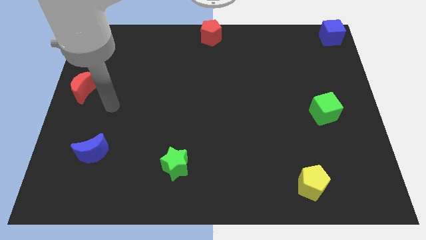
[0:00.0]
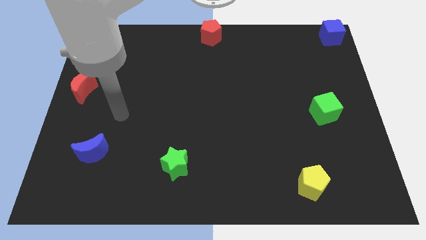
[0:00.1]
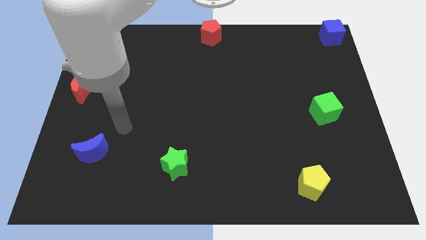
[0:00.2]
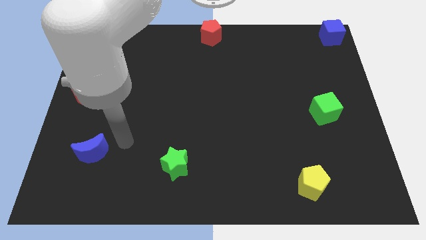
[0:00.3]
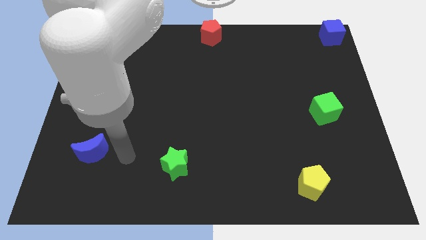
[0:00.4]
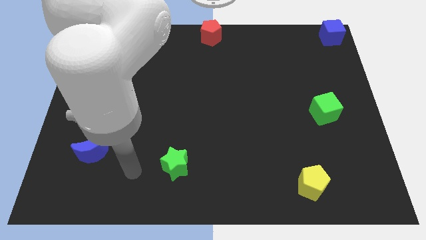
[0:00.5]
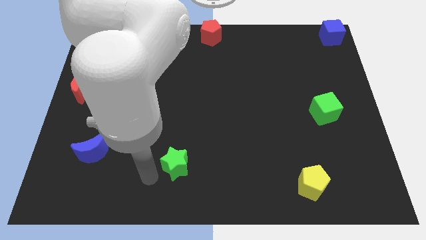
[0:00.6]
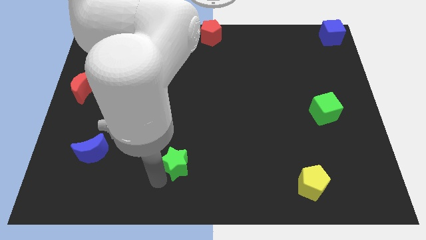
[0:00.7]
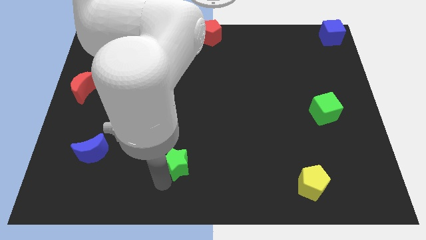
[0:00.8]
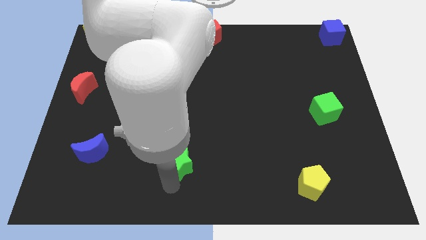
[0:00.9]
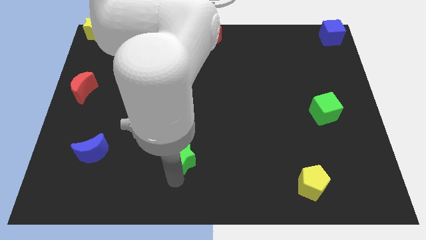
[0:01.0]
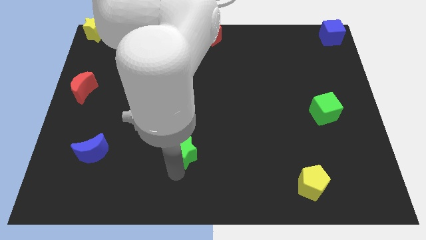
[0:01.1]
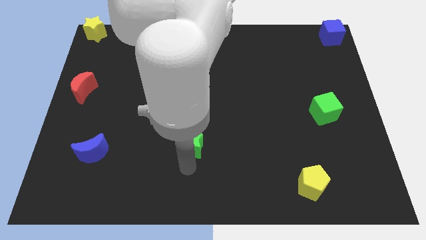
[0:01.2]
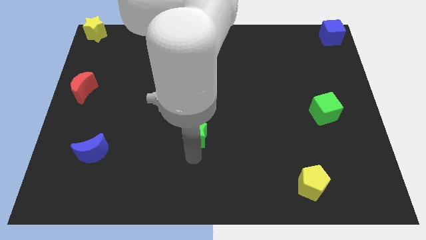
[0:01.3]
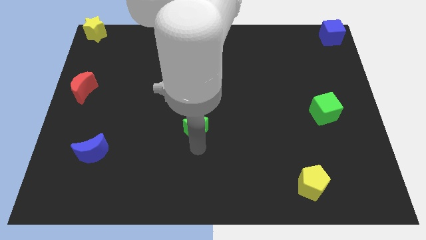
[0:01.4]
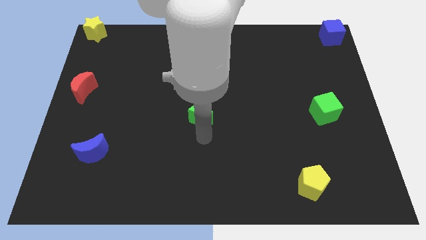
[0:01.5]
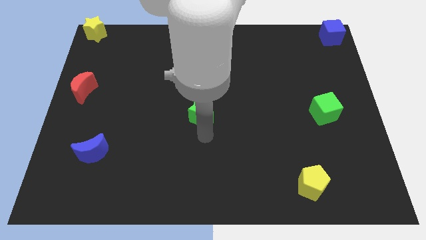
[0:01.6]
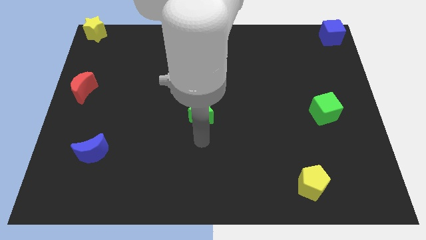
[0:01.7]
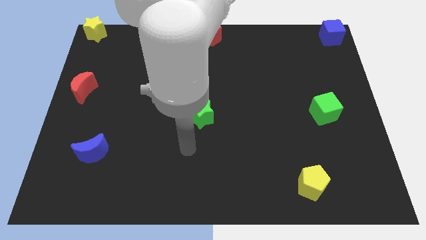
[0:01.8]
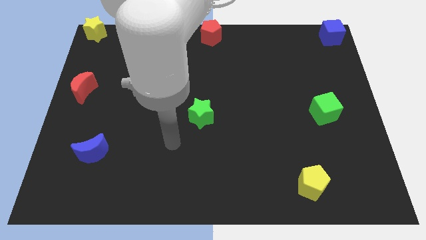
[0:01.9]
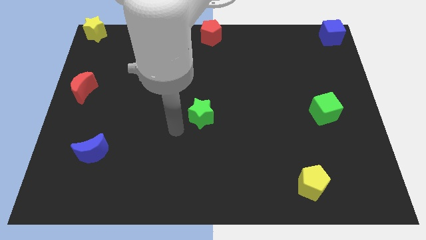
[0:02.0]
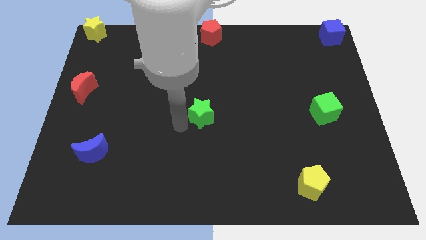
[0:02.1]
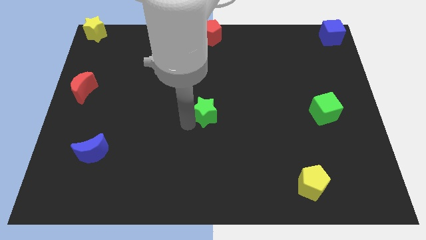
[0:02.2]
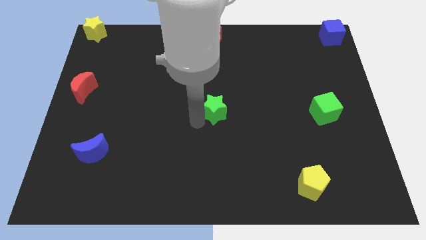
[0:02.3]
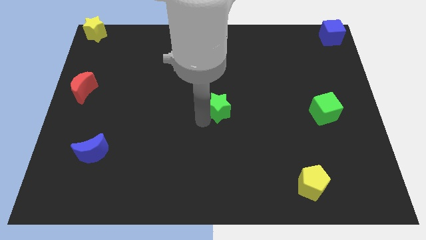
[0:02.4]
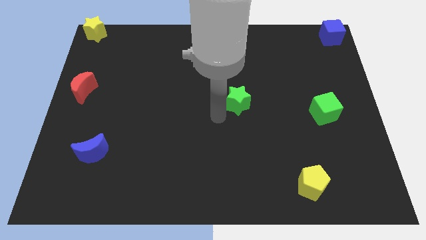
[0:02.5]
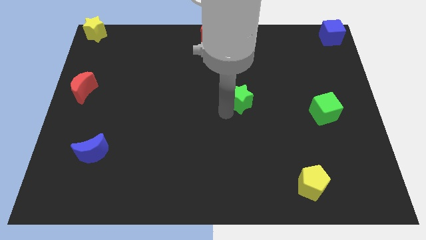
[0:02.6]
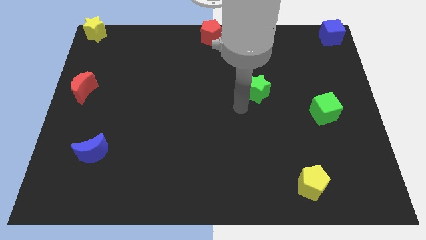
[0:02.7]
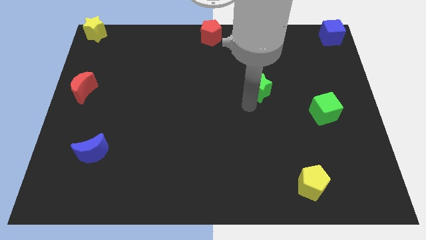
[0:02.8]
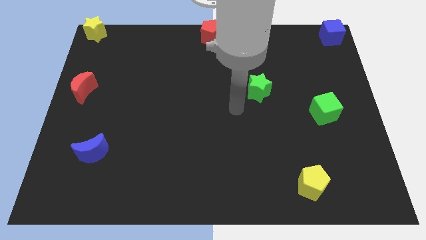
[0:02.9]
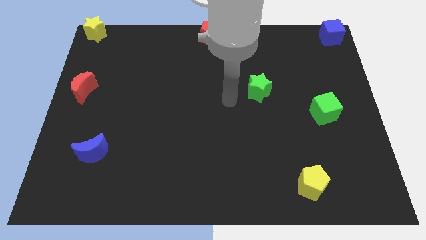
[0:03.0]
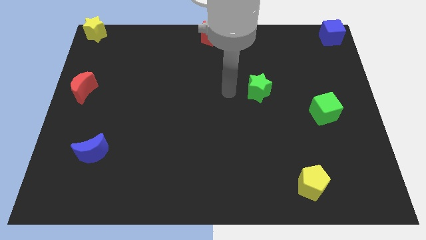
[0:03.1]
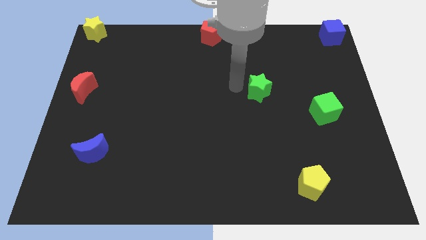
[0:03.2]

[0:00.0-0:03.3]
push the green star diagonally on the top left side of the green cube

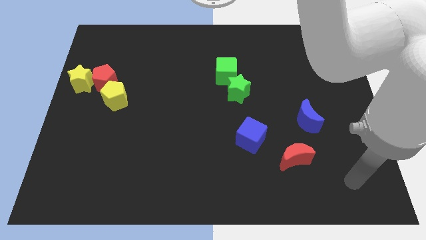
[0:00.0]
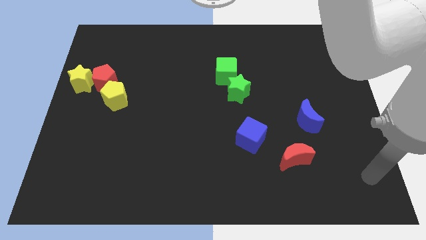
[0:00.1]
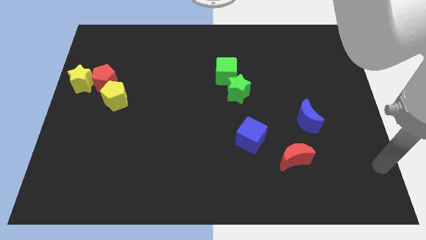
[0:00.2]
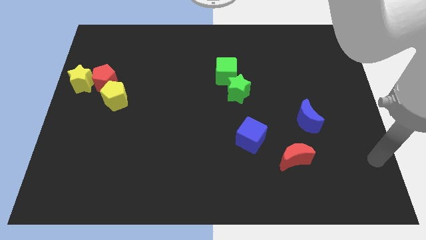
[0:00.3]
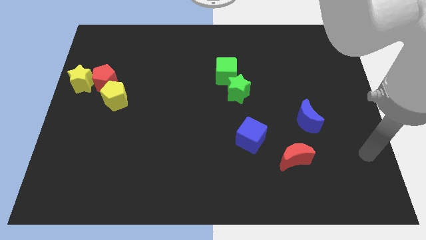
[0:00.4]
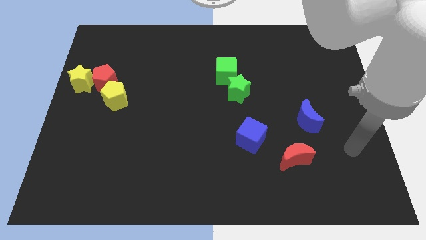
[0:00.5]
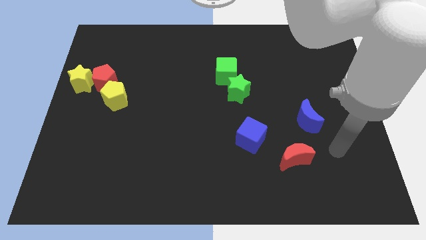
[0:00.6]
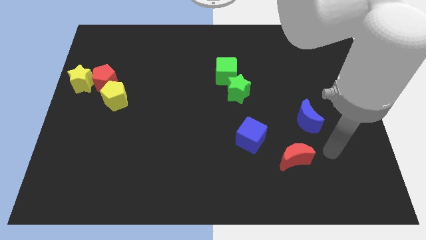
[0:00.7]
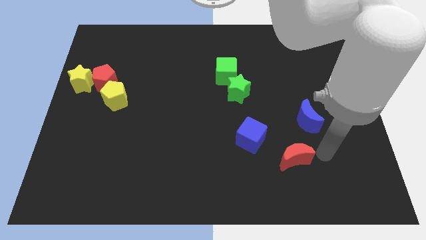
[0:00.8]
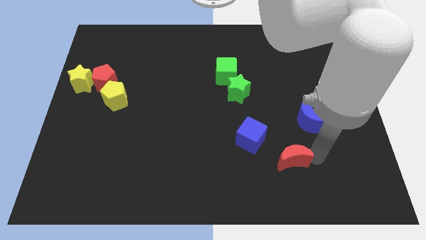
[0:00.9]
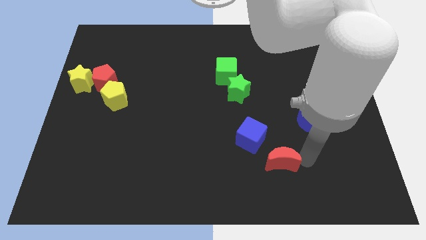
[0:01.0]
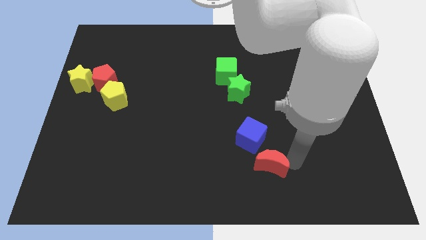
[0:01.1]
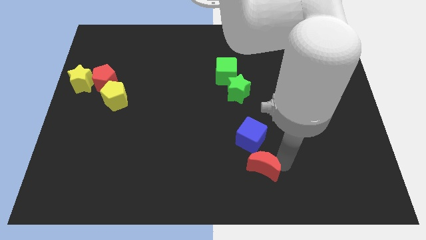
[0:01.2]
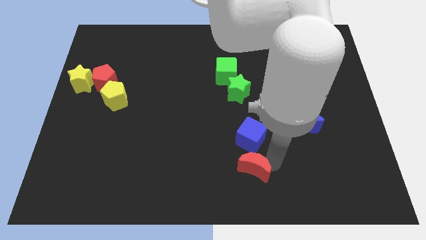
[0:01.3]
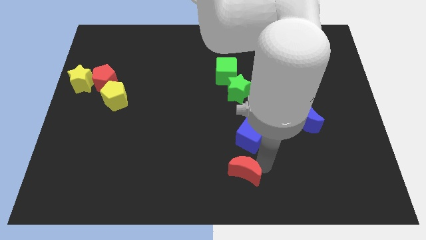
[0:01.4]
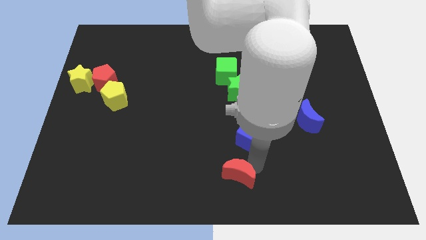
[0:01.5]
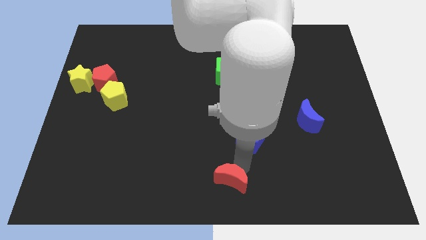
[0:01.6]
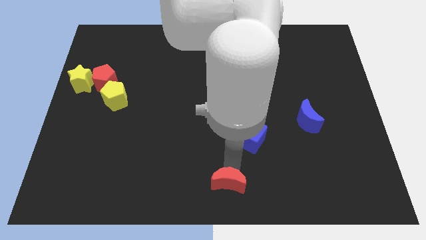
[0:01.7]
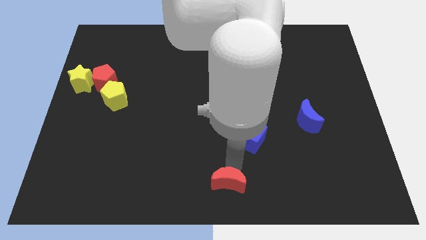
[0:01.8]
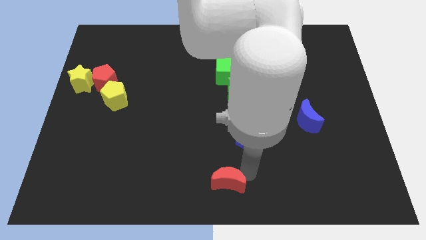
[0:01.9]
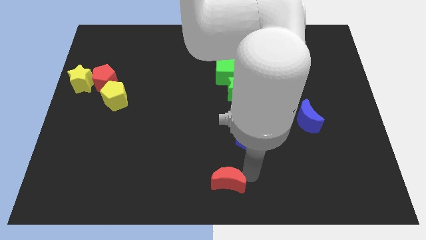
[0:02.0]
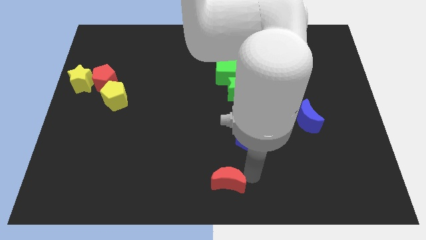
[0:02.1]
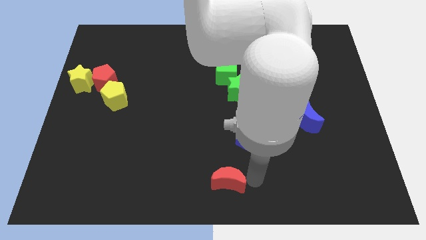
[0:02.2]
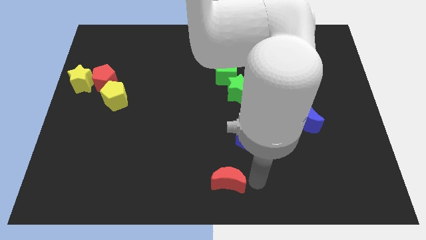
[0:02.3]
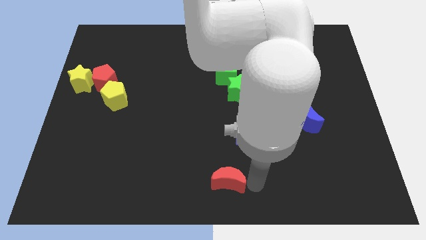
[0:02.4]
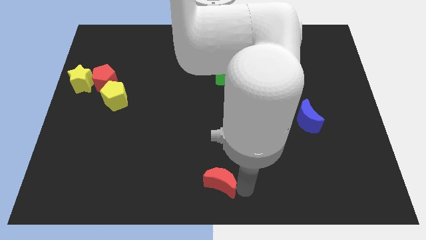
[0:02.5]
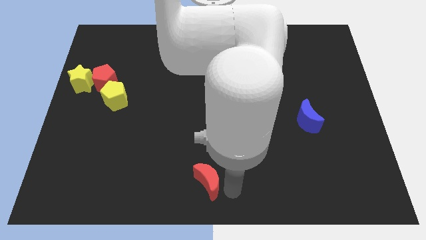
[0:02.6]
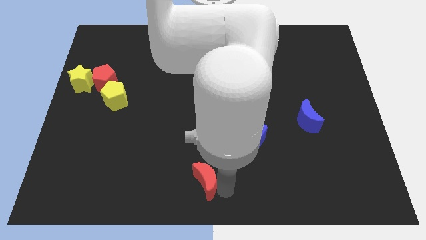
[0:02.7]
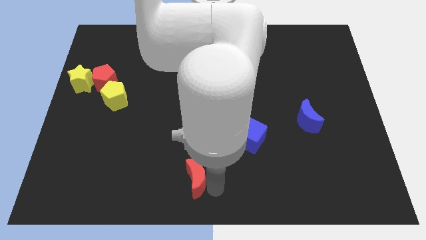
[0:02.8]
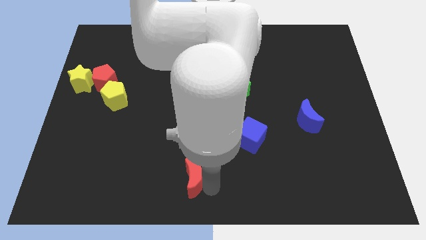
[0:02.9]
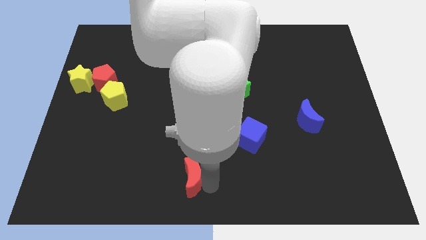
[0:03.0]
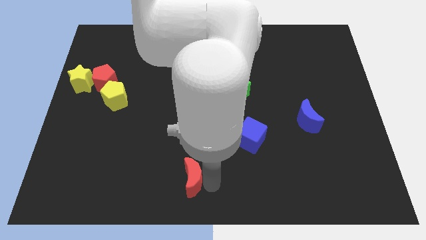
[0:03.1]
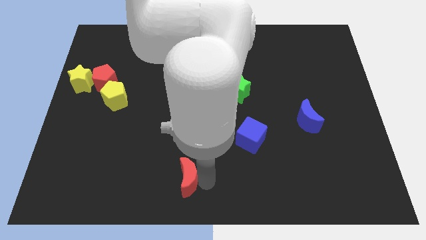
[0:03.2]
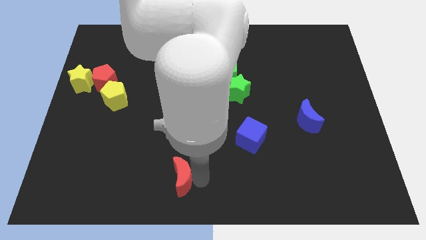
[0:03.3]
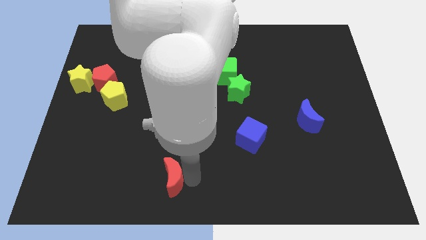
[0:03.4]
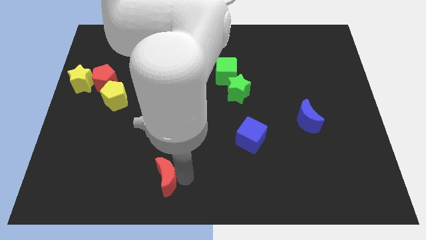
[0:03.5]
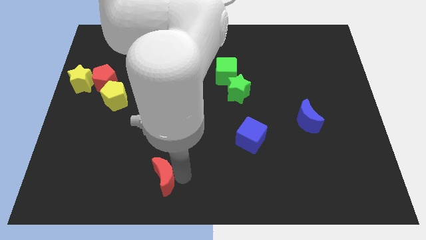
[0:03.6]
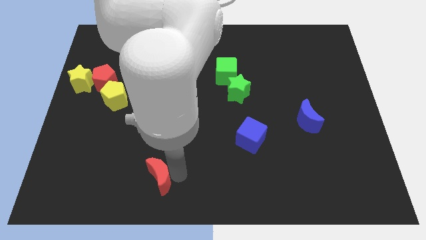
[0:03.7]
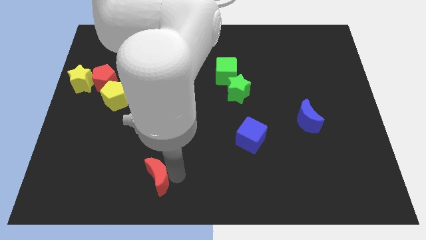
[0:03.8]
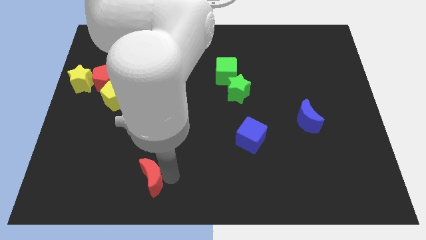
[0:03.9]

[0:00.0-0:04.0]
move red crescent diagonally bottom left of the green star

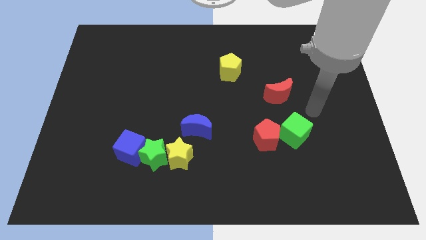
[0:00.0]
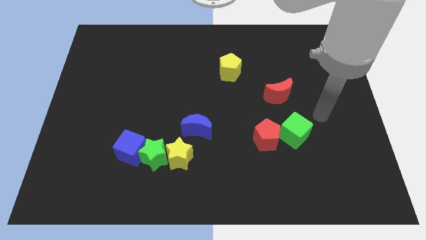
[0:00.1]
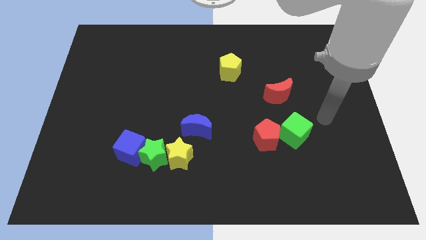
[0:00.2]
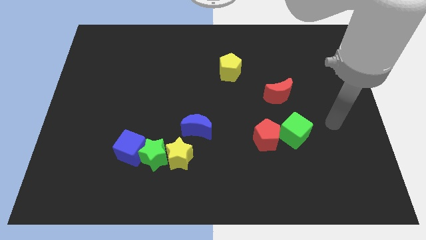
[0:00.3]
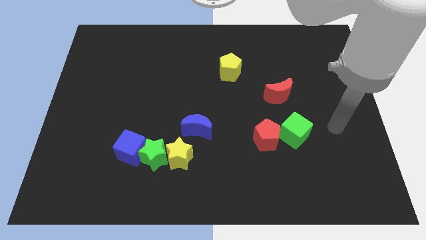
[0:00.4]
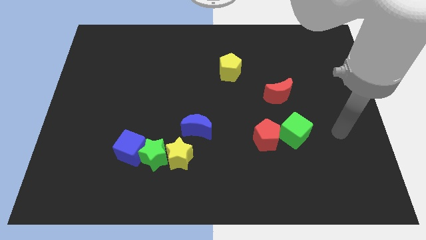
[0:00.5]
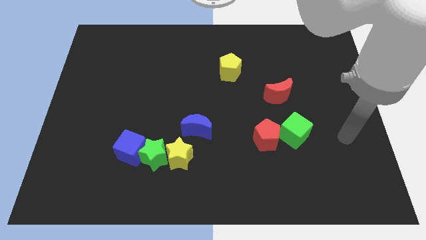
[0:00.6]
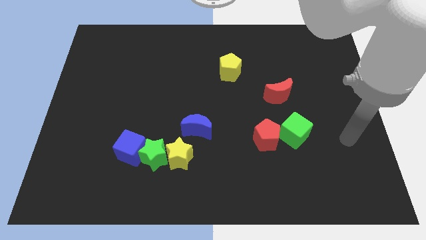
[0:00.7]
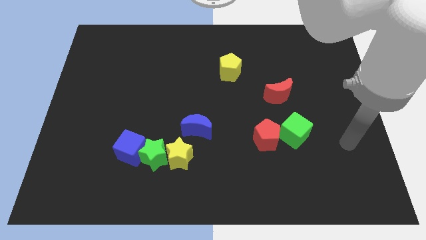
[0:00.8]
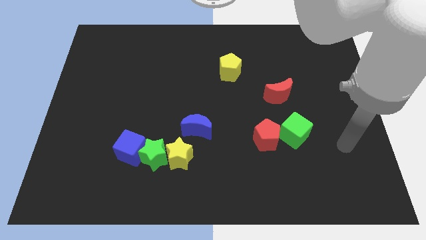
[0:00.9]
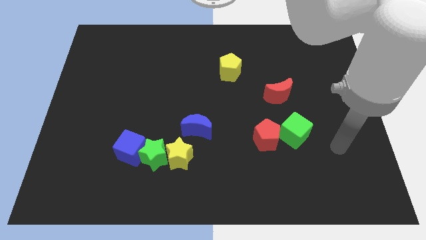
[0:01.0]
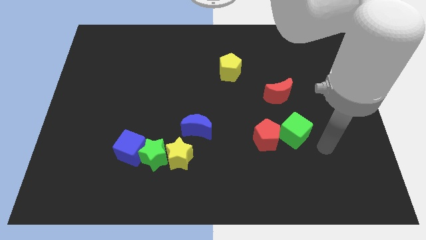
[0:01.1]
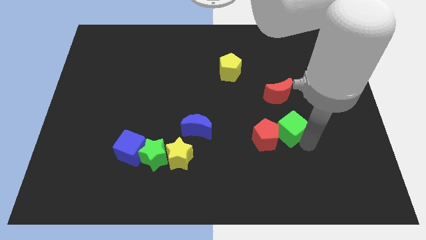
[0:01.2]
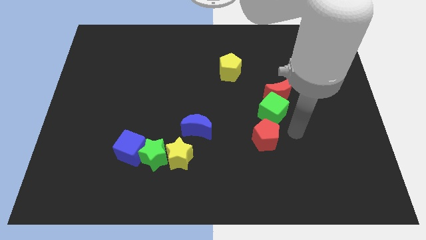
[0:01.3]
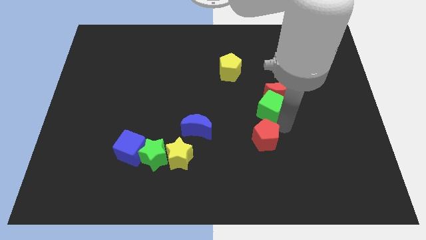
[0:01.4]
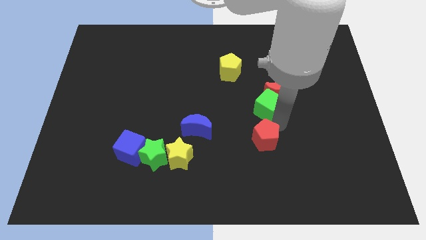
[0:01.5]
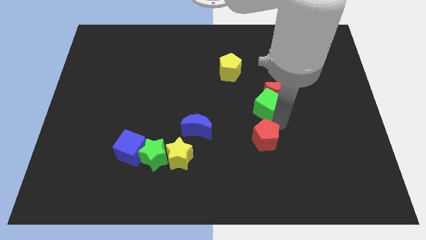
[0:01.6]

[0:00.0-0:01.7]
move the green cube above the red pentagon
